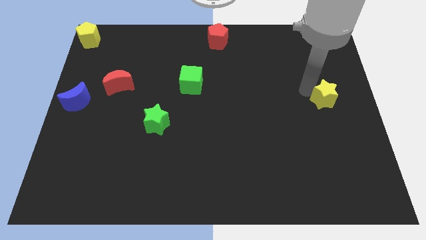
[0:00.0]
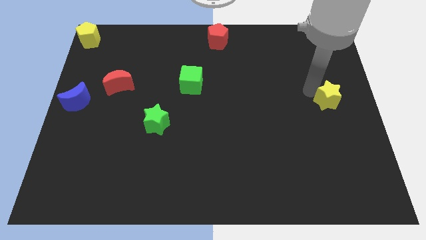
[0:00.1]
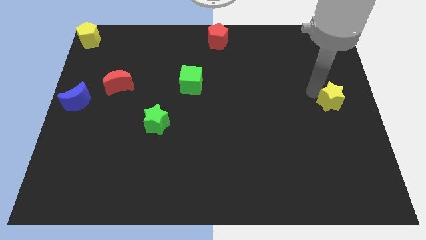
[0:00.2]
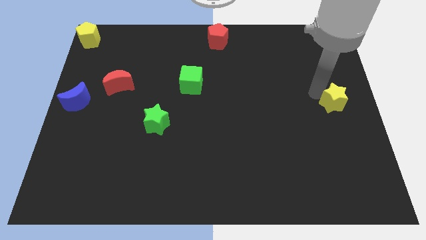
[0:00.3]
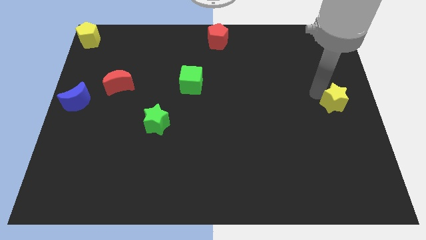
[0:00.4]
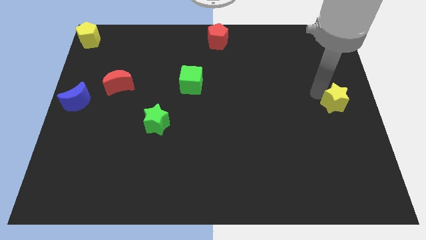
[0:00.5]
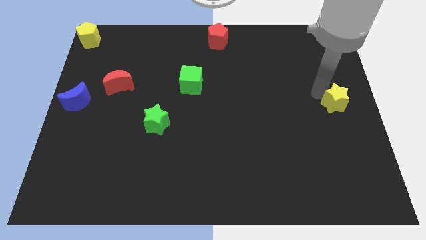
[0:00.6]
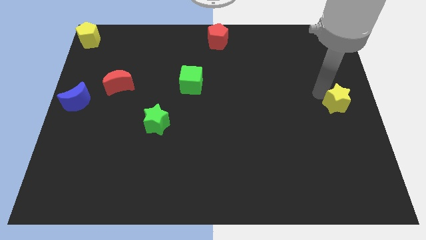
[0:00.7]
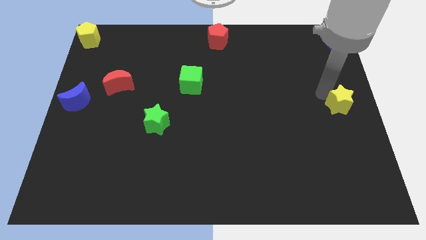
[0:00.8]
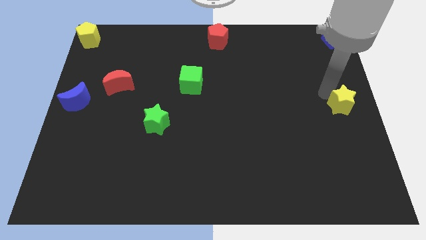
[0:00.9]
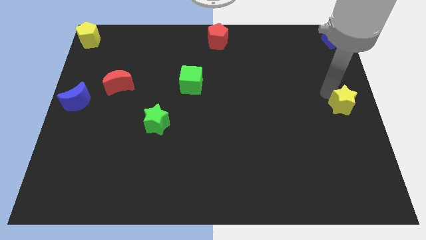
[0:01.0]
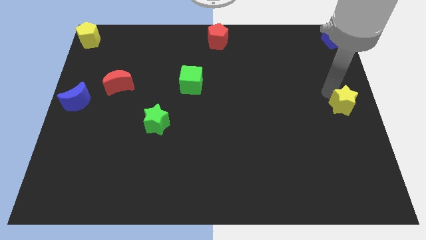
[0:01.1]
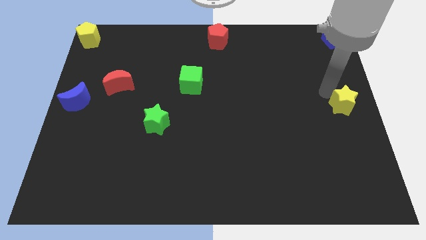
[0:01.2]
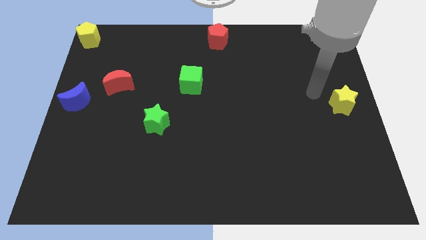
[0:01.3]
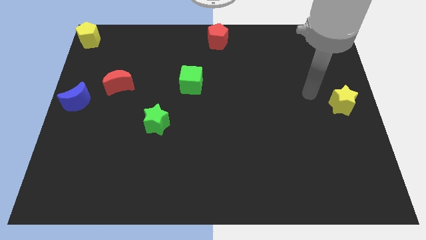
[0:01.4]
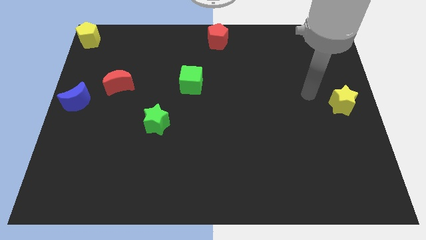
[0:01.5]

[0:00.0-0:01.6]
move the yellow star towards the right center

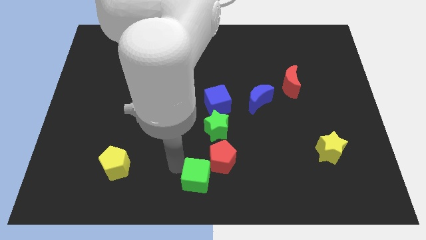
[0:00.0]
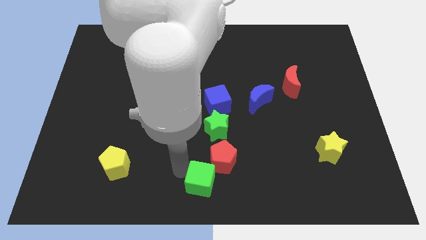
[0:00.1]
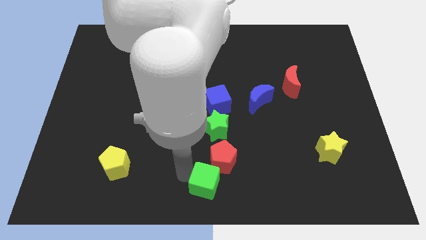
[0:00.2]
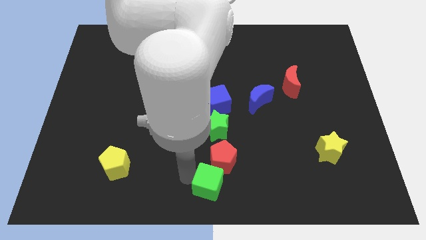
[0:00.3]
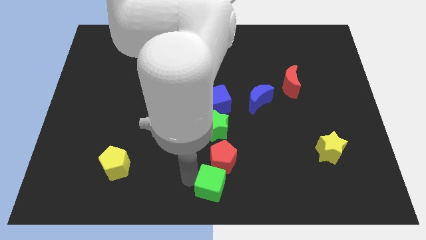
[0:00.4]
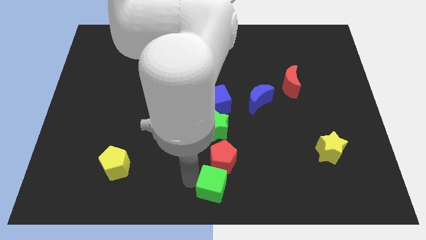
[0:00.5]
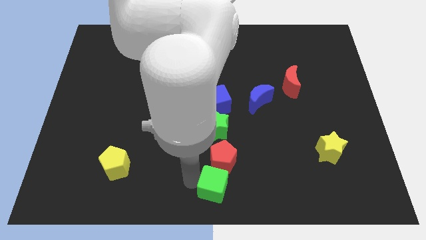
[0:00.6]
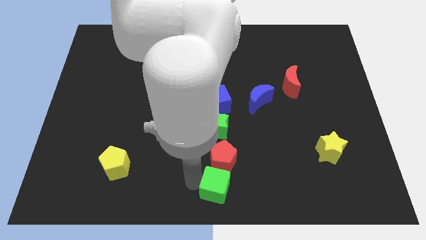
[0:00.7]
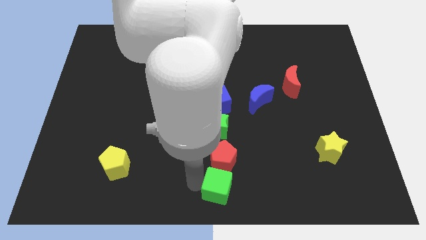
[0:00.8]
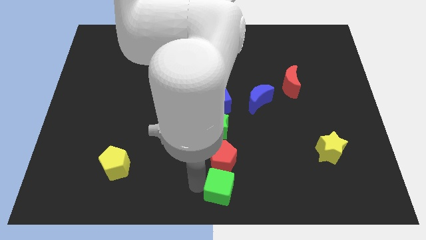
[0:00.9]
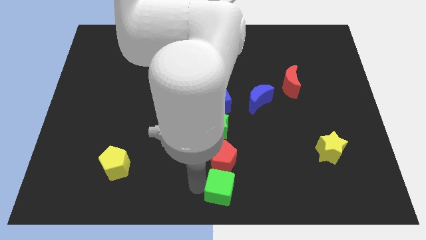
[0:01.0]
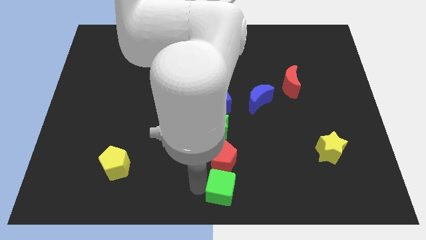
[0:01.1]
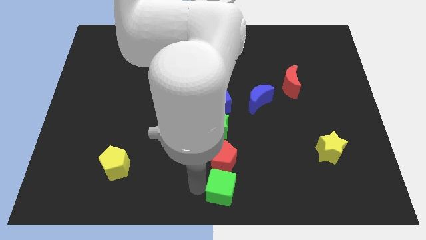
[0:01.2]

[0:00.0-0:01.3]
move green cube to the bottom center

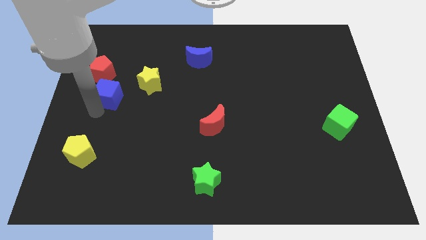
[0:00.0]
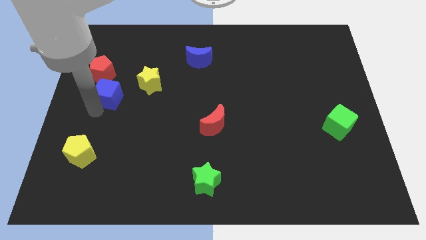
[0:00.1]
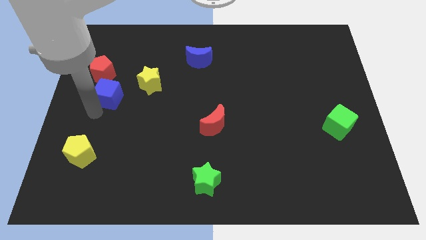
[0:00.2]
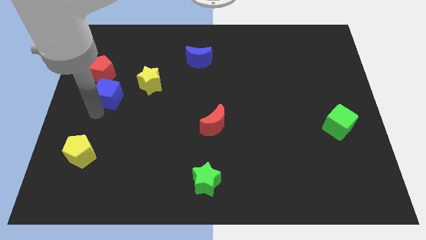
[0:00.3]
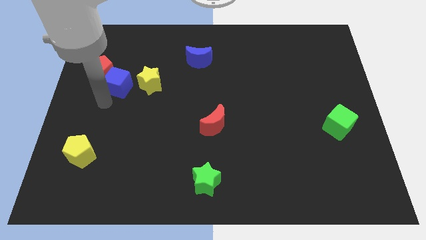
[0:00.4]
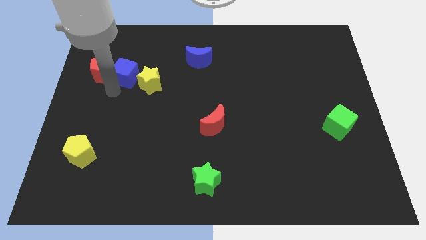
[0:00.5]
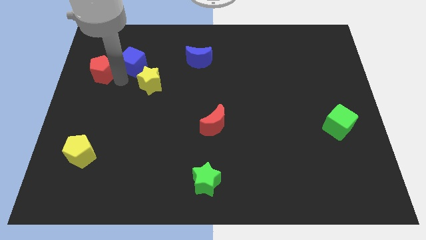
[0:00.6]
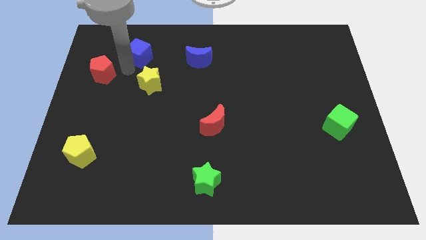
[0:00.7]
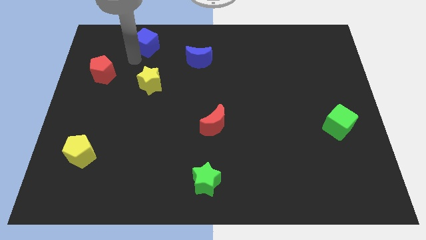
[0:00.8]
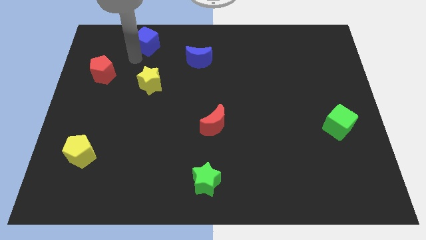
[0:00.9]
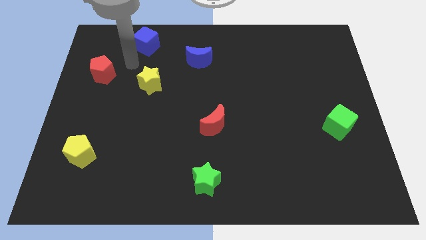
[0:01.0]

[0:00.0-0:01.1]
separate blue cube from red pentagon

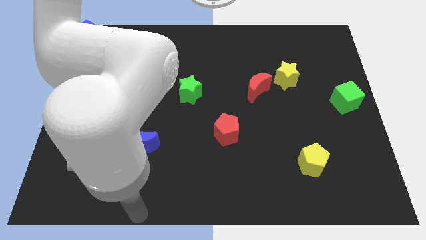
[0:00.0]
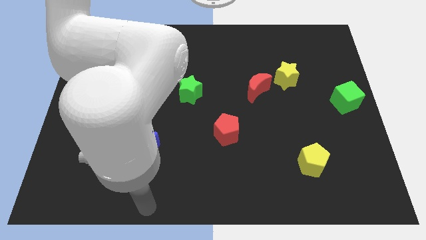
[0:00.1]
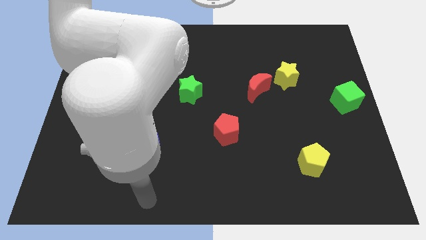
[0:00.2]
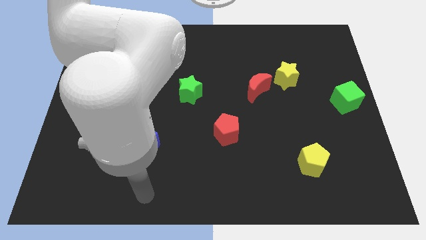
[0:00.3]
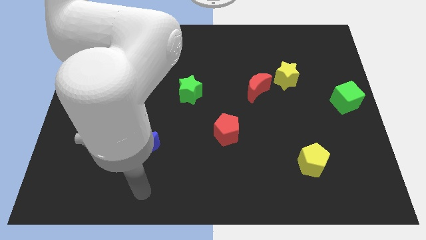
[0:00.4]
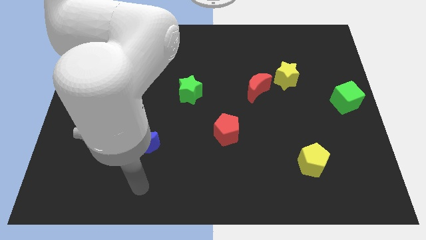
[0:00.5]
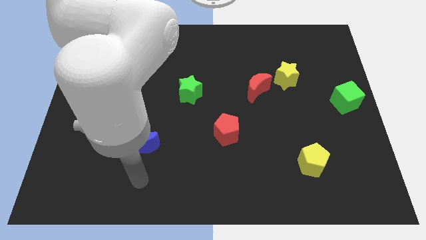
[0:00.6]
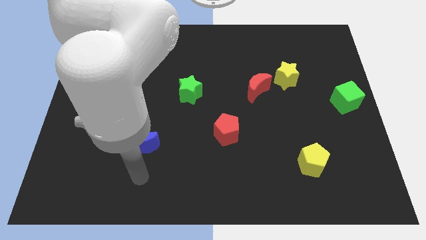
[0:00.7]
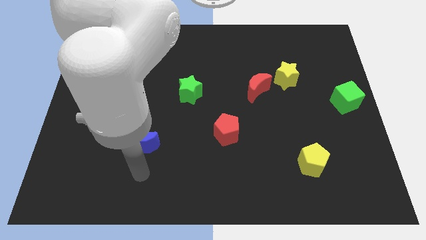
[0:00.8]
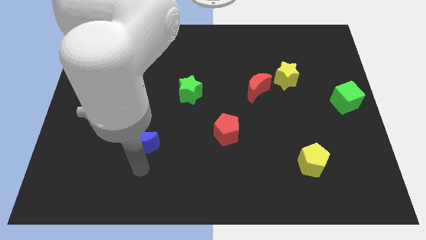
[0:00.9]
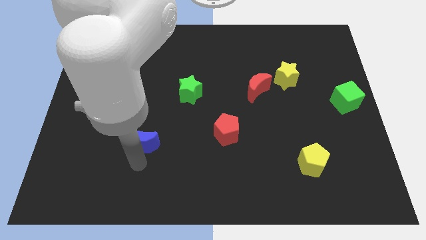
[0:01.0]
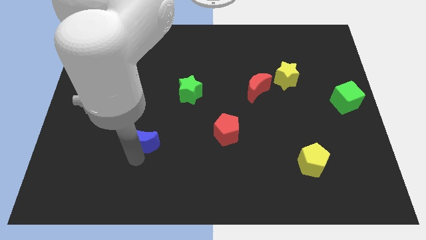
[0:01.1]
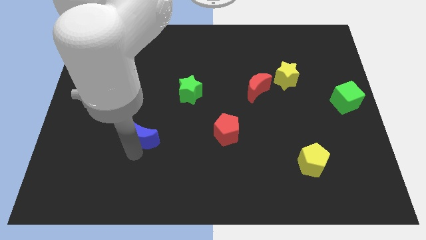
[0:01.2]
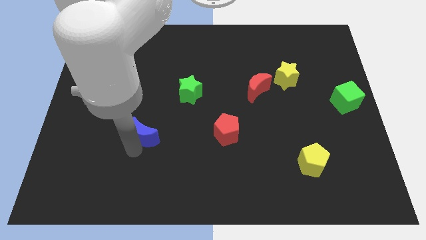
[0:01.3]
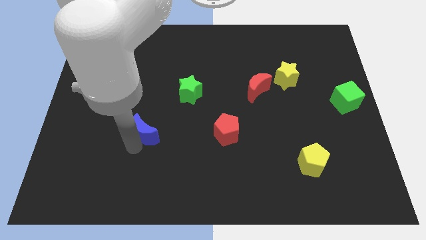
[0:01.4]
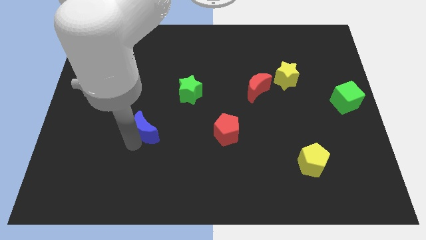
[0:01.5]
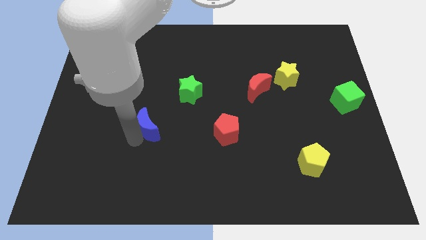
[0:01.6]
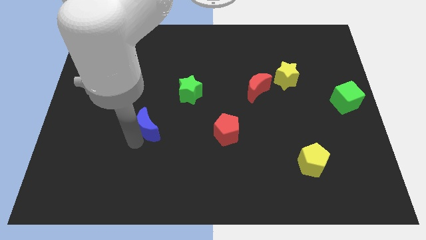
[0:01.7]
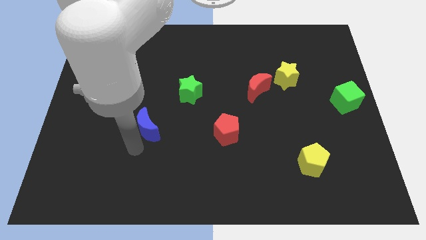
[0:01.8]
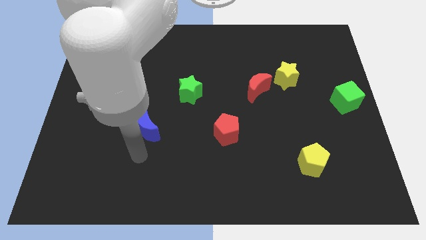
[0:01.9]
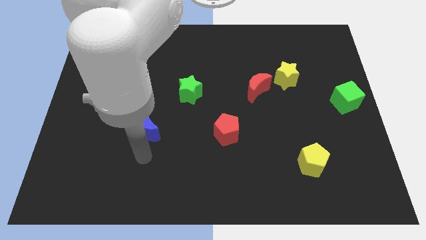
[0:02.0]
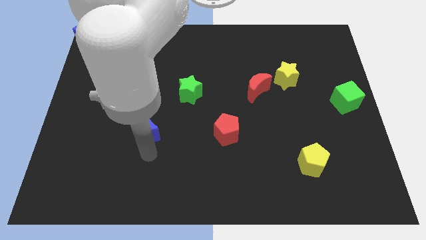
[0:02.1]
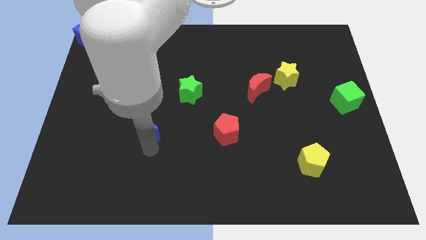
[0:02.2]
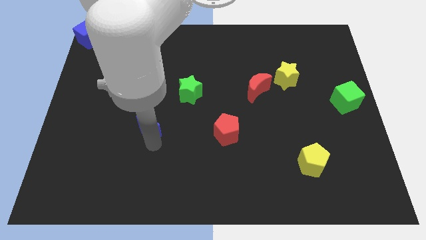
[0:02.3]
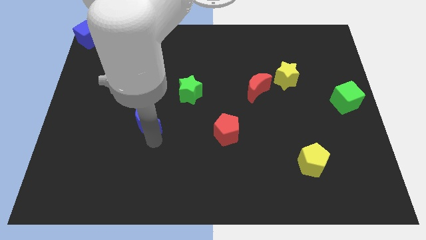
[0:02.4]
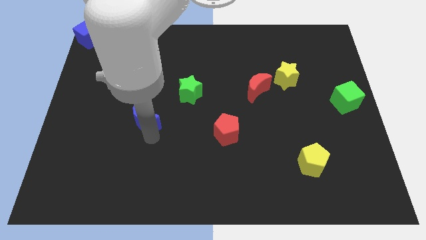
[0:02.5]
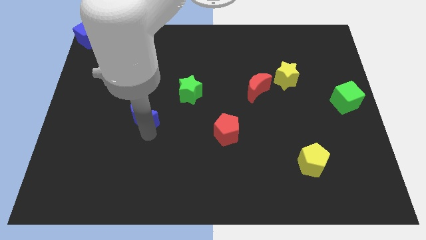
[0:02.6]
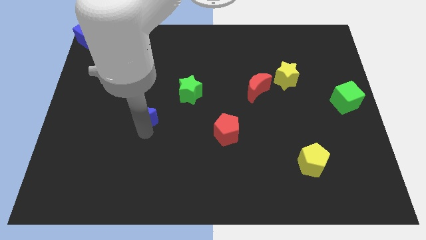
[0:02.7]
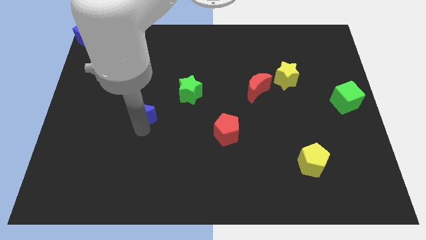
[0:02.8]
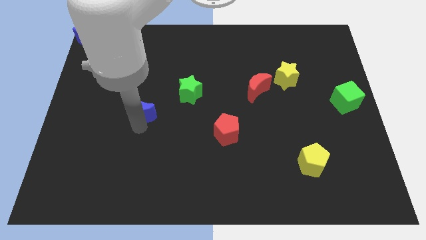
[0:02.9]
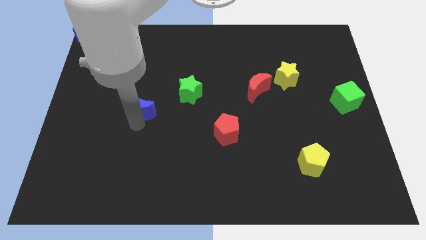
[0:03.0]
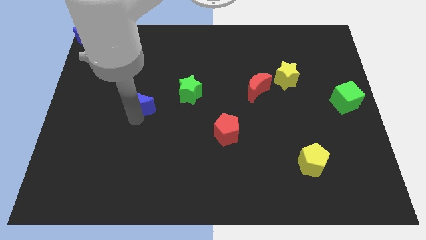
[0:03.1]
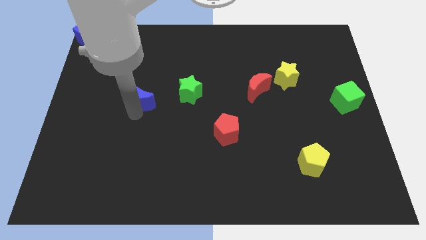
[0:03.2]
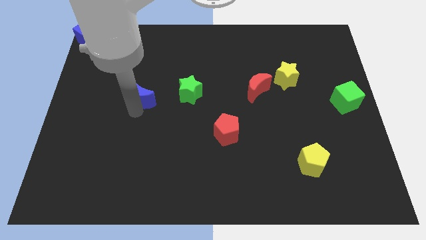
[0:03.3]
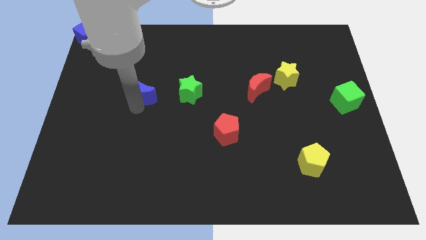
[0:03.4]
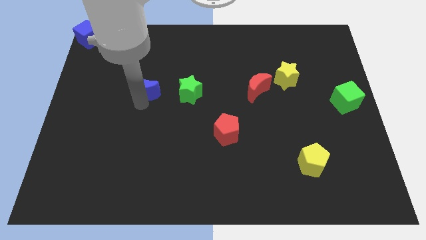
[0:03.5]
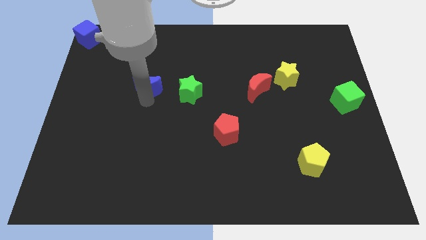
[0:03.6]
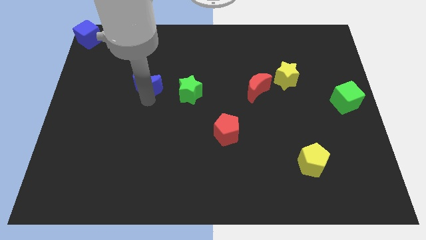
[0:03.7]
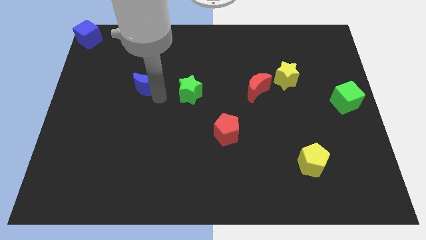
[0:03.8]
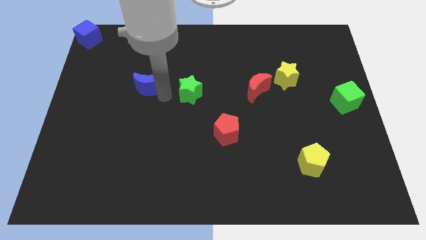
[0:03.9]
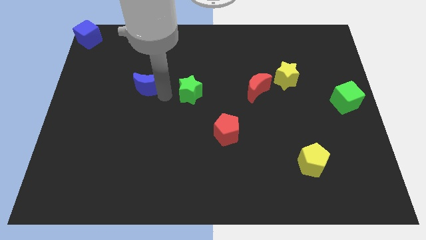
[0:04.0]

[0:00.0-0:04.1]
place blue moon to the left of green star

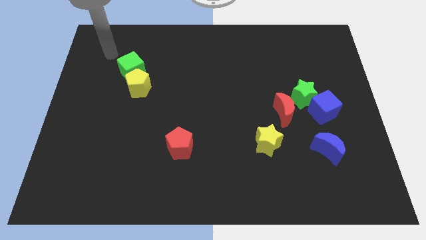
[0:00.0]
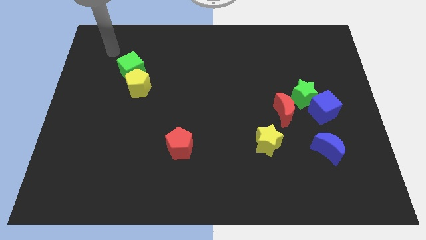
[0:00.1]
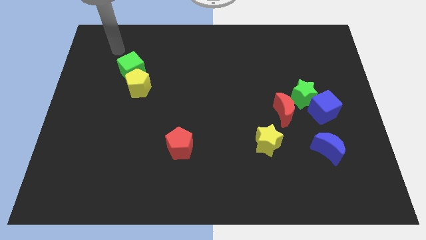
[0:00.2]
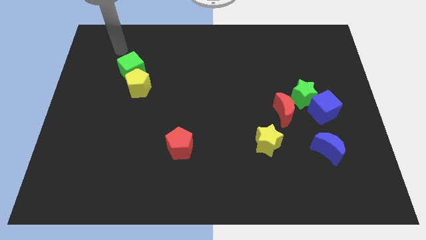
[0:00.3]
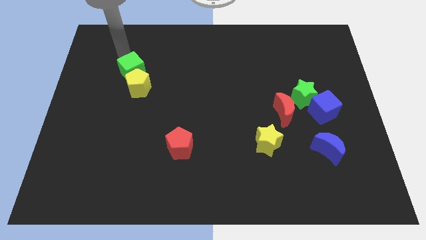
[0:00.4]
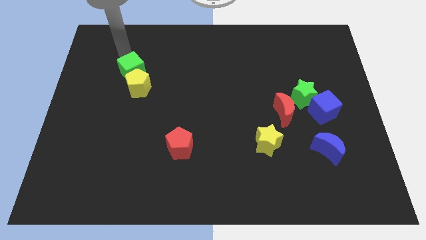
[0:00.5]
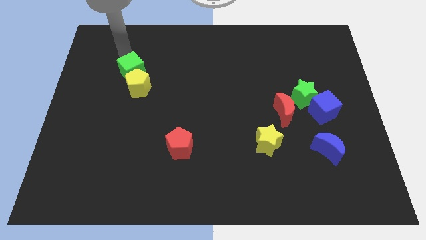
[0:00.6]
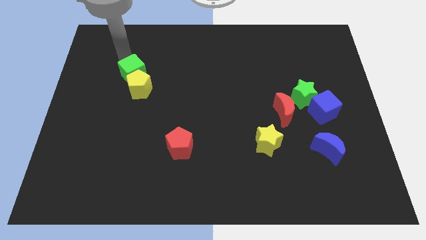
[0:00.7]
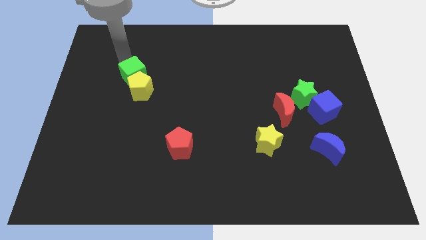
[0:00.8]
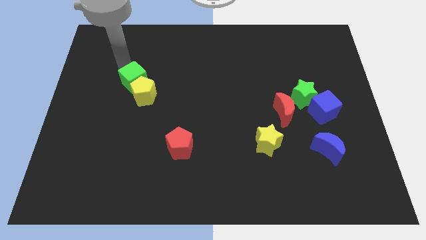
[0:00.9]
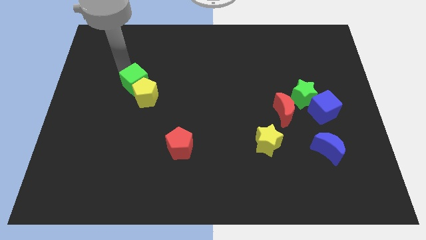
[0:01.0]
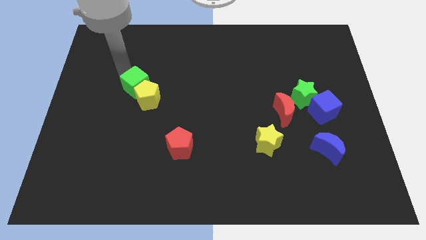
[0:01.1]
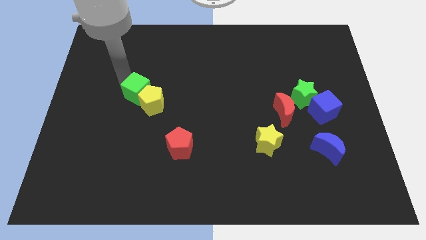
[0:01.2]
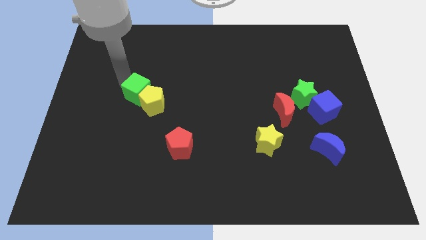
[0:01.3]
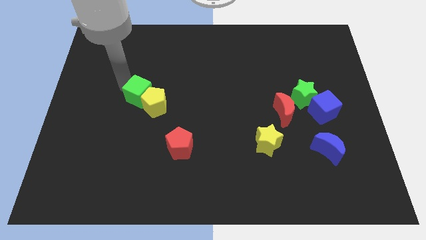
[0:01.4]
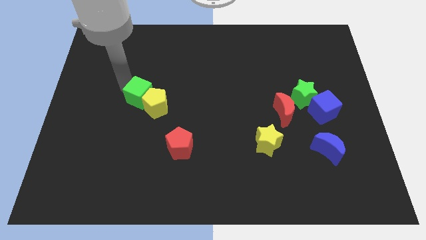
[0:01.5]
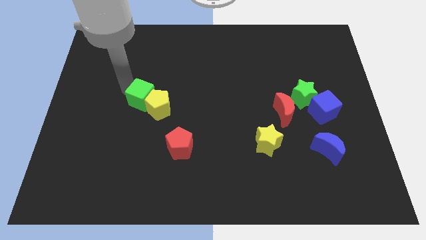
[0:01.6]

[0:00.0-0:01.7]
move the green cube and the yellow pentagon towards the bottom of the board
